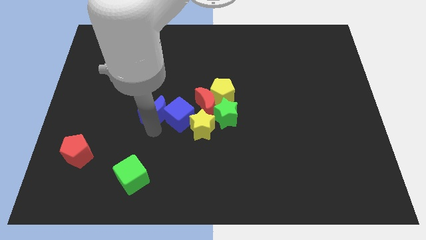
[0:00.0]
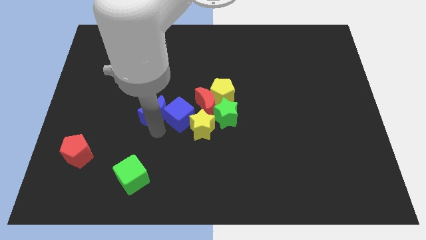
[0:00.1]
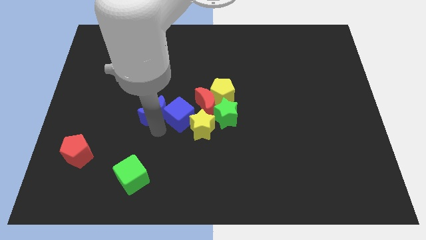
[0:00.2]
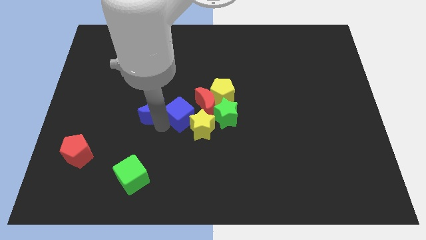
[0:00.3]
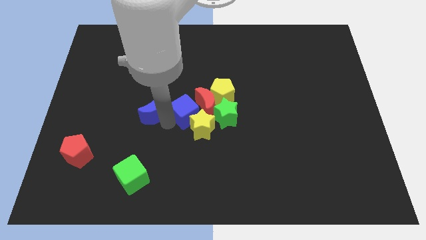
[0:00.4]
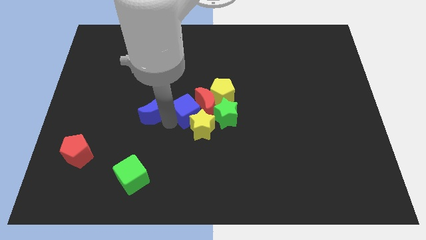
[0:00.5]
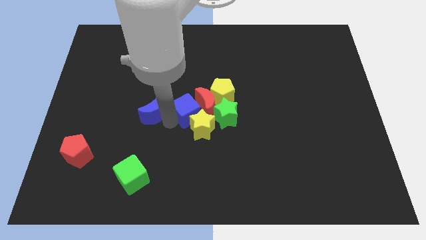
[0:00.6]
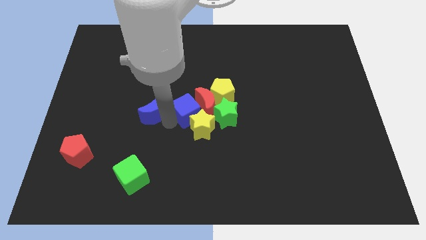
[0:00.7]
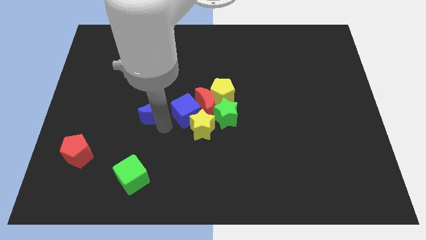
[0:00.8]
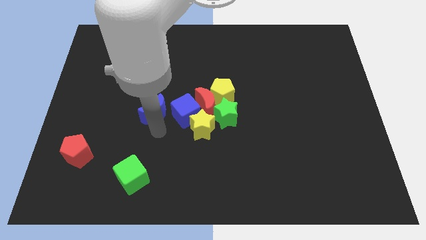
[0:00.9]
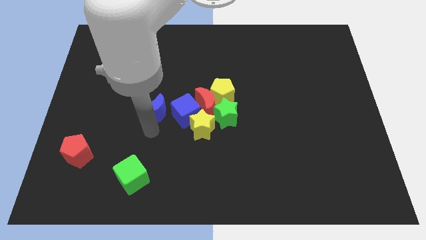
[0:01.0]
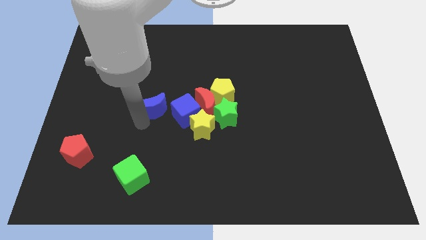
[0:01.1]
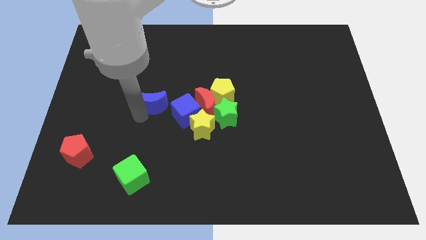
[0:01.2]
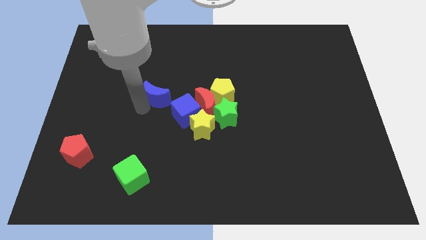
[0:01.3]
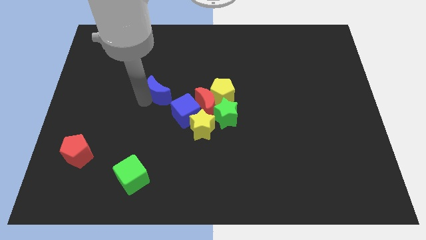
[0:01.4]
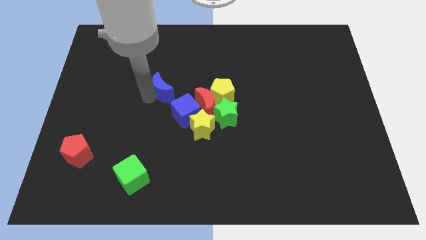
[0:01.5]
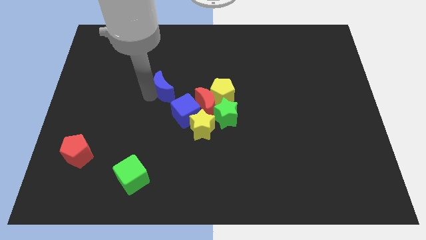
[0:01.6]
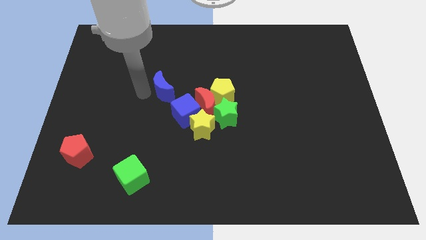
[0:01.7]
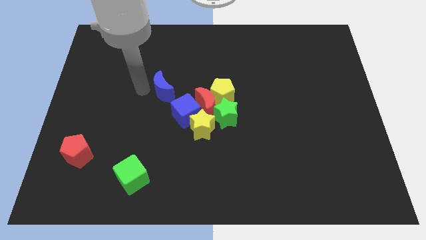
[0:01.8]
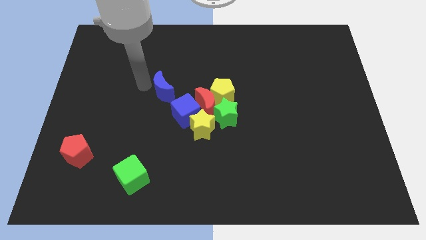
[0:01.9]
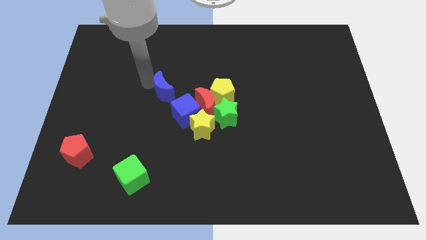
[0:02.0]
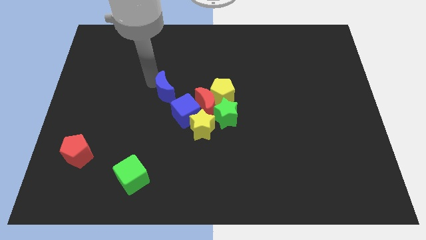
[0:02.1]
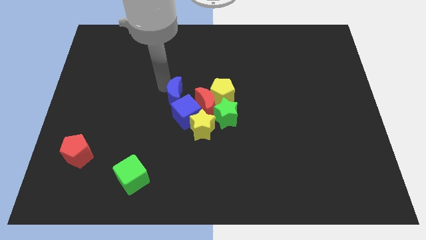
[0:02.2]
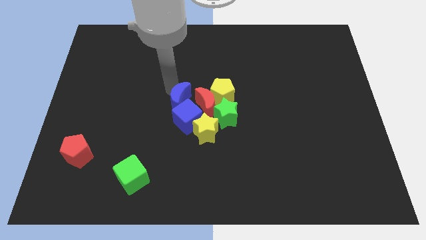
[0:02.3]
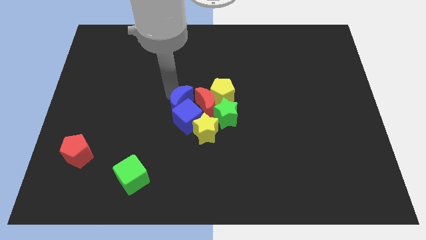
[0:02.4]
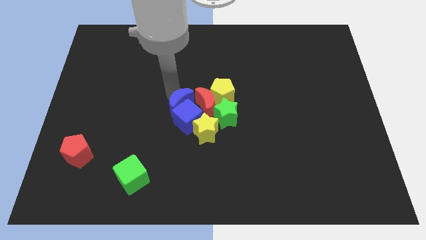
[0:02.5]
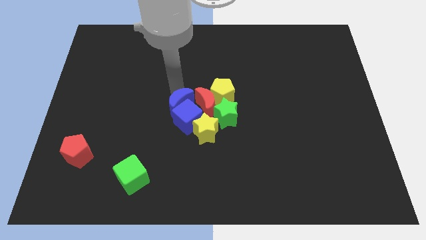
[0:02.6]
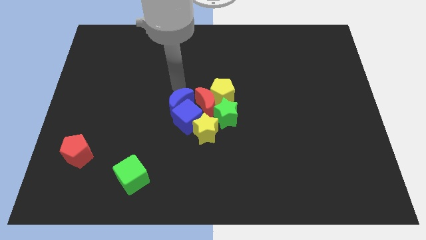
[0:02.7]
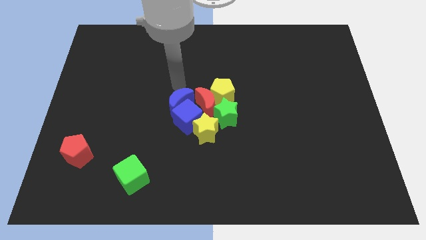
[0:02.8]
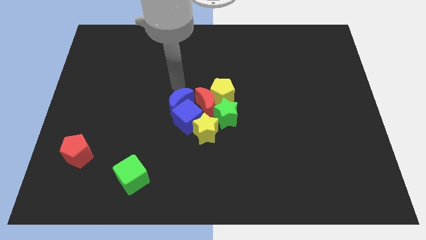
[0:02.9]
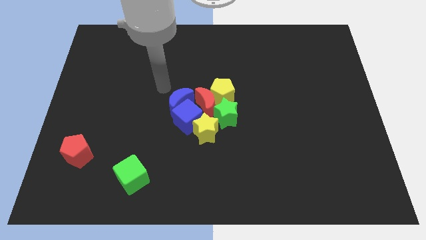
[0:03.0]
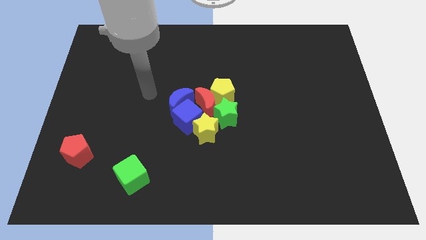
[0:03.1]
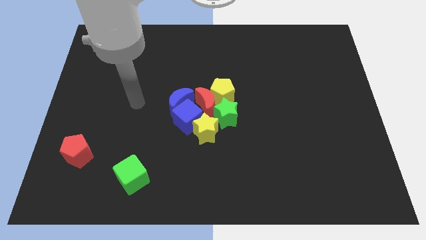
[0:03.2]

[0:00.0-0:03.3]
push blue blocks into group of blocks

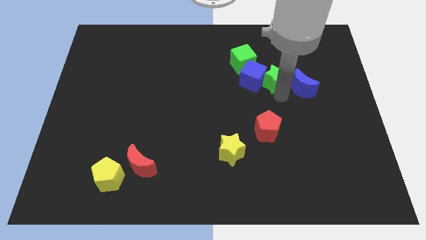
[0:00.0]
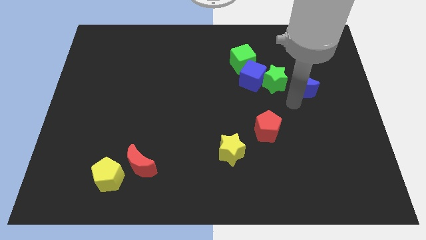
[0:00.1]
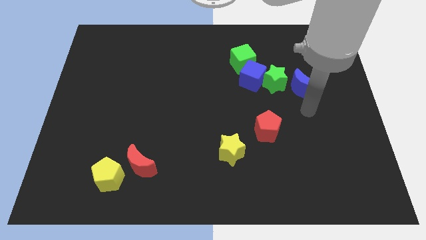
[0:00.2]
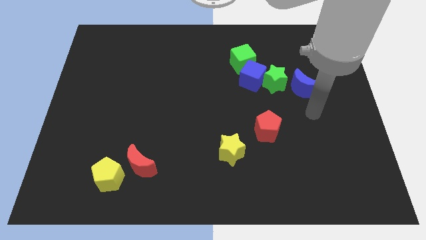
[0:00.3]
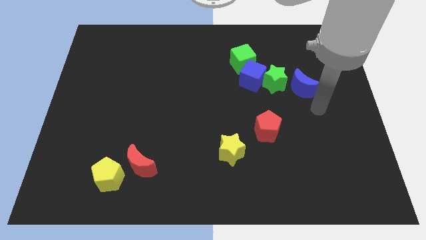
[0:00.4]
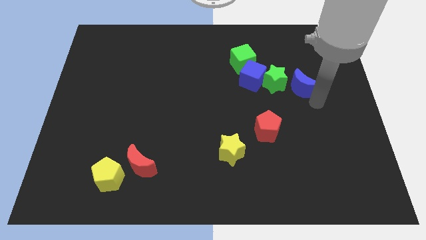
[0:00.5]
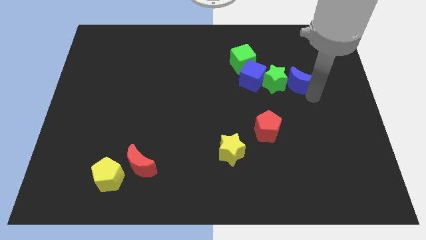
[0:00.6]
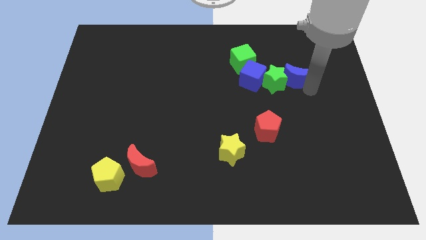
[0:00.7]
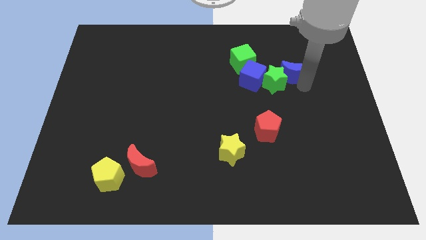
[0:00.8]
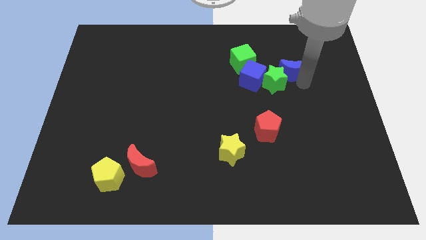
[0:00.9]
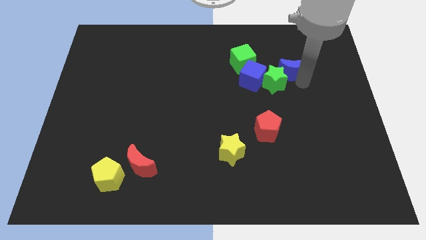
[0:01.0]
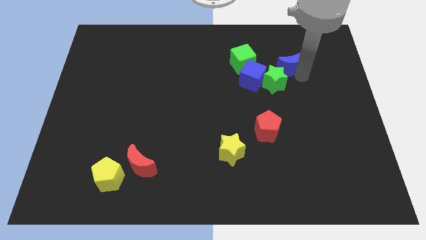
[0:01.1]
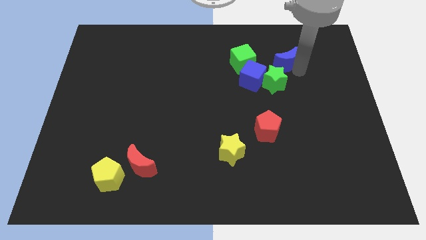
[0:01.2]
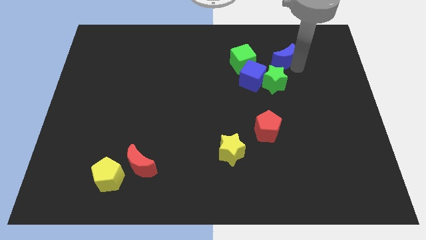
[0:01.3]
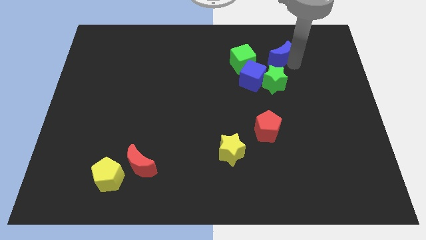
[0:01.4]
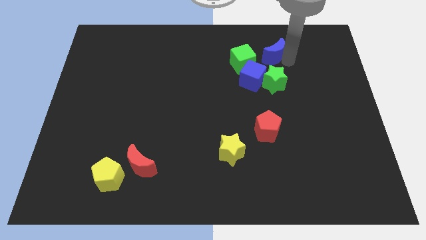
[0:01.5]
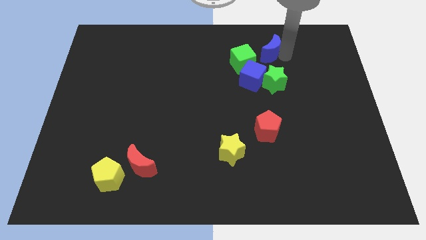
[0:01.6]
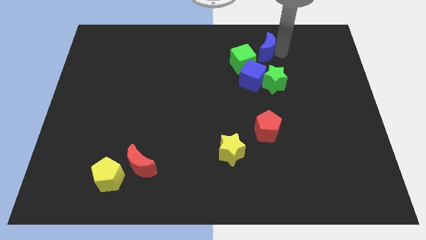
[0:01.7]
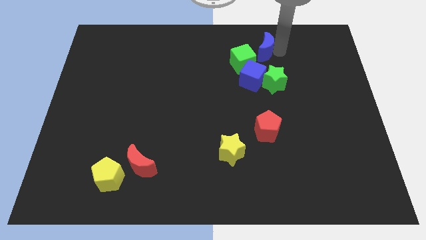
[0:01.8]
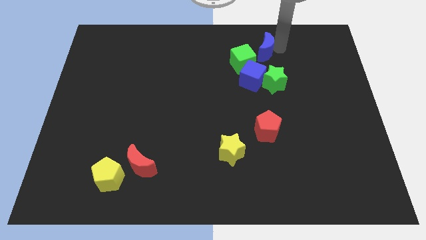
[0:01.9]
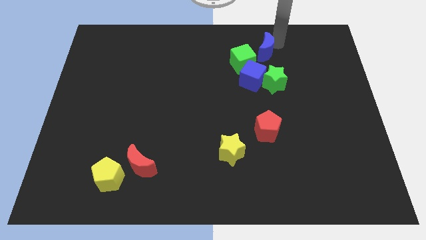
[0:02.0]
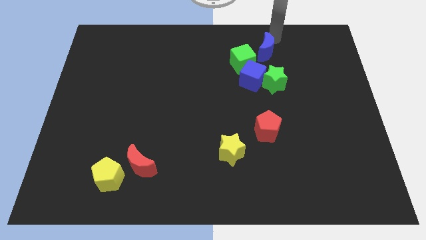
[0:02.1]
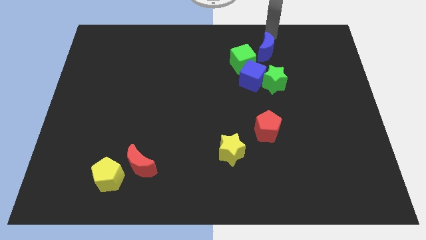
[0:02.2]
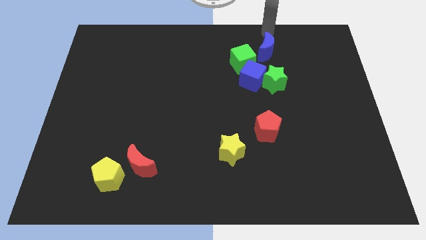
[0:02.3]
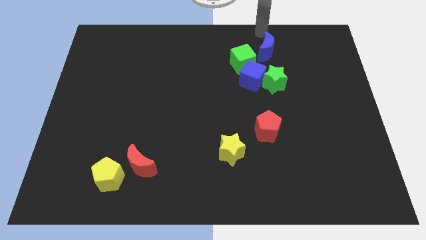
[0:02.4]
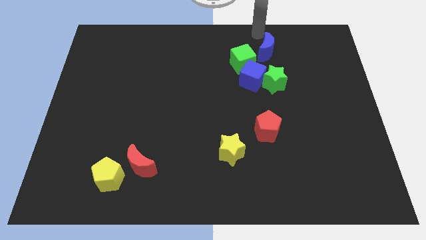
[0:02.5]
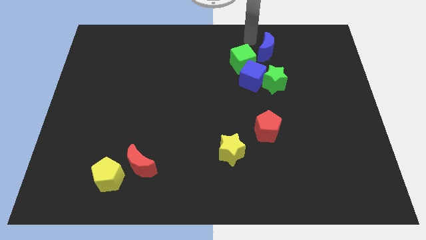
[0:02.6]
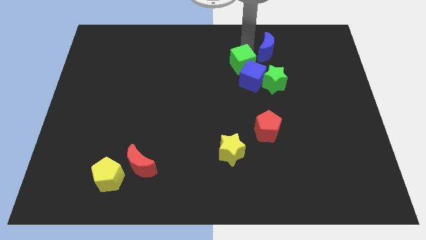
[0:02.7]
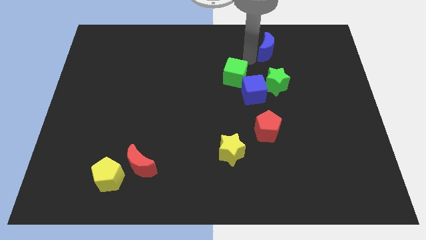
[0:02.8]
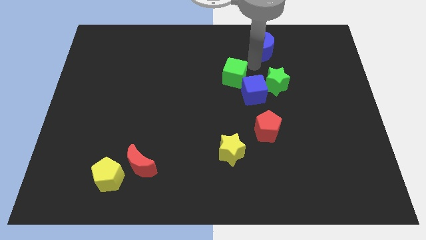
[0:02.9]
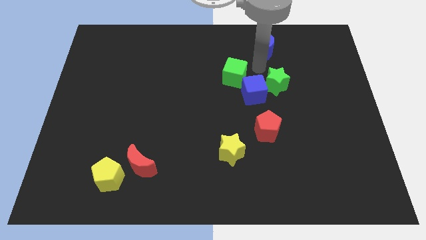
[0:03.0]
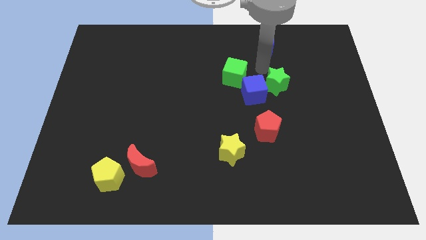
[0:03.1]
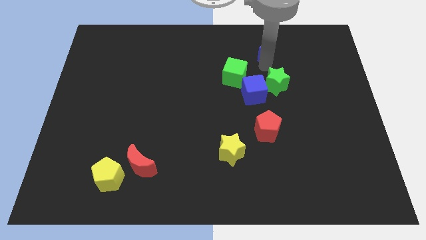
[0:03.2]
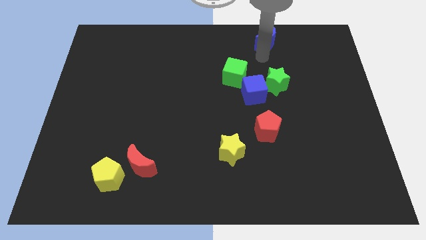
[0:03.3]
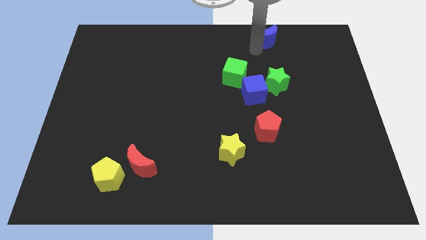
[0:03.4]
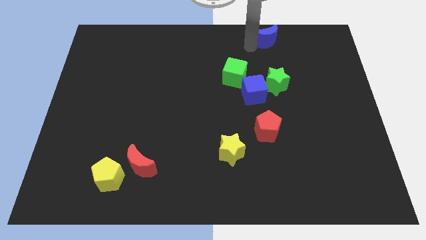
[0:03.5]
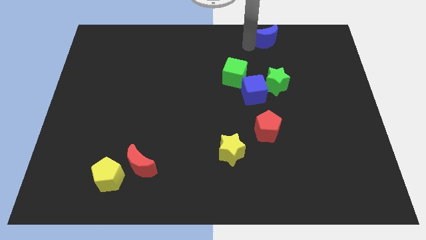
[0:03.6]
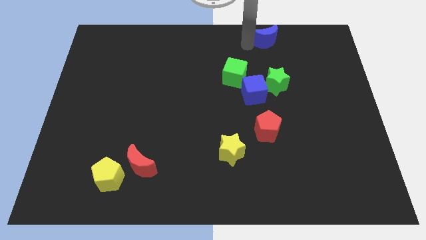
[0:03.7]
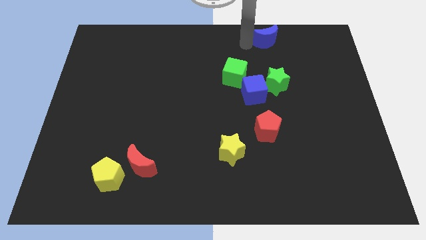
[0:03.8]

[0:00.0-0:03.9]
move the blue crescent towards the top of the board

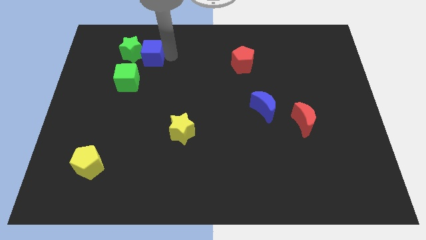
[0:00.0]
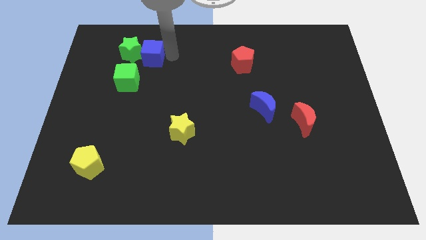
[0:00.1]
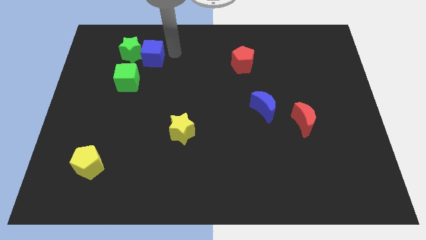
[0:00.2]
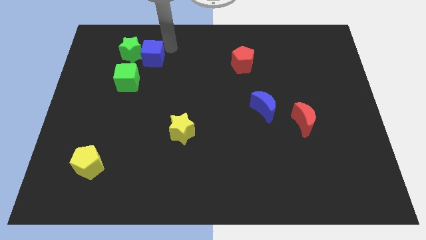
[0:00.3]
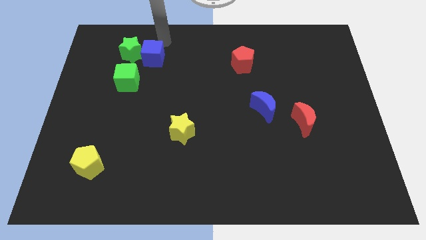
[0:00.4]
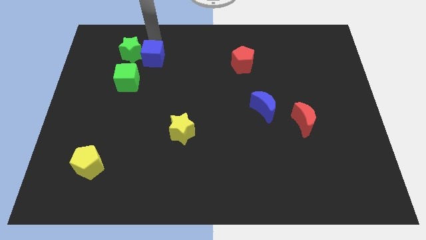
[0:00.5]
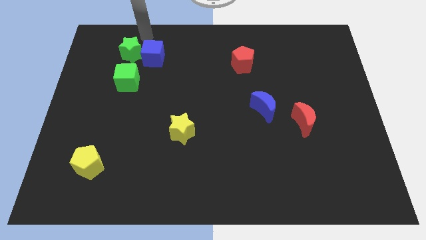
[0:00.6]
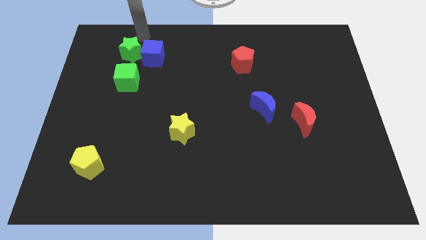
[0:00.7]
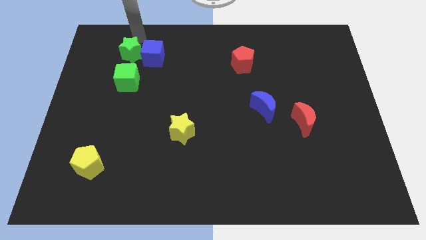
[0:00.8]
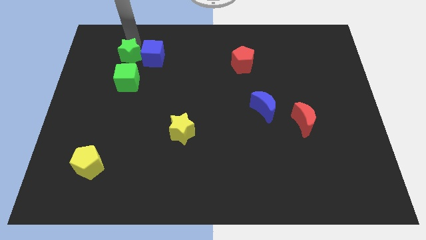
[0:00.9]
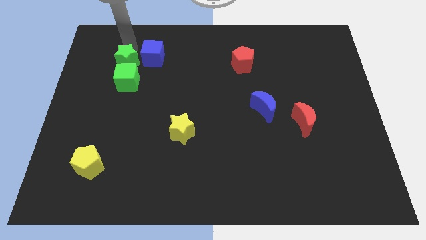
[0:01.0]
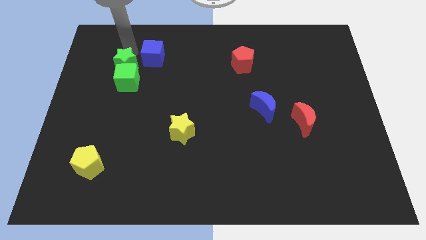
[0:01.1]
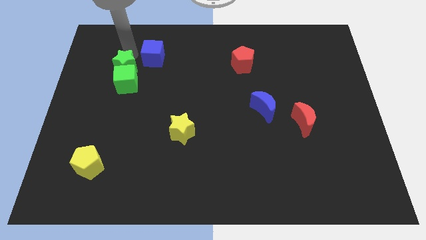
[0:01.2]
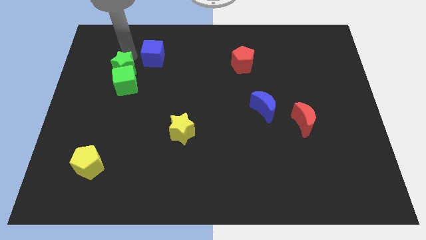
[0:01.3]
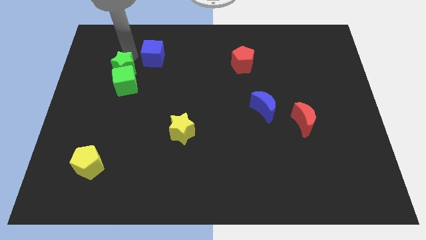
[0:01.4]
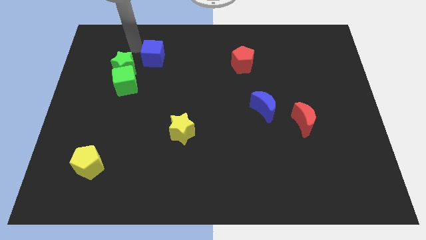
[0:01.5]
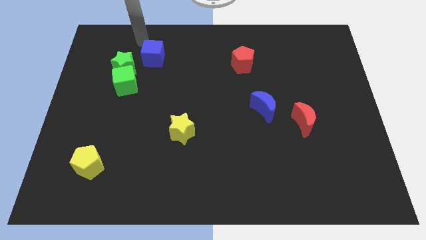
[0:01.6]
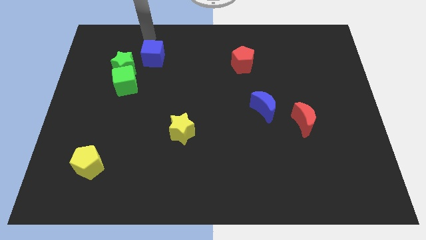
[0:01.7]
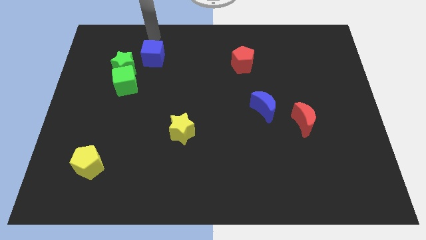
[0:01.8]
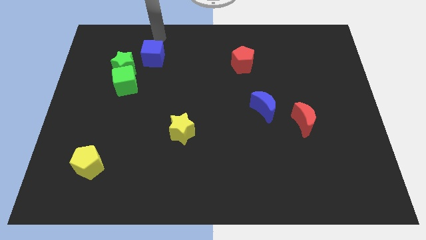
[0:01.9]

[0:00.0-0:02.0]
push the green star into the green cube
